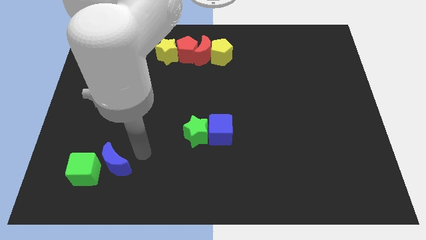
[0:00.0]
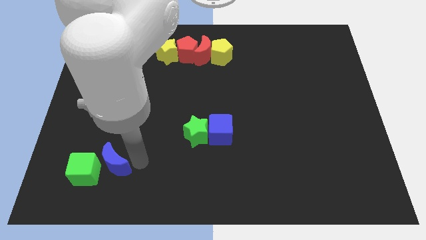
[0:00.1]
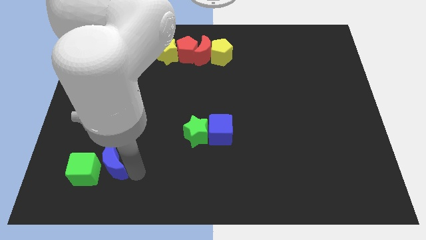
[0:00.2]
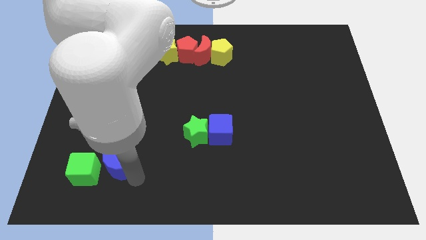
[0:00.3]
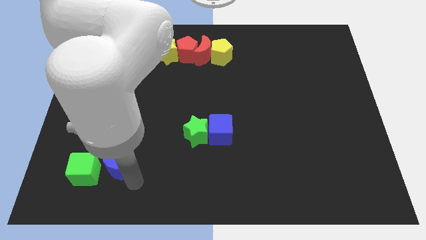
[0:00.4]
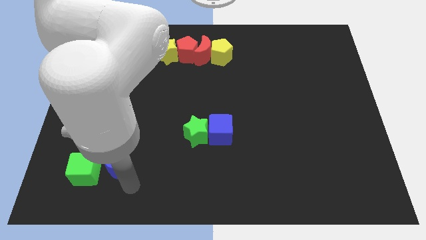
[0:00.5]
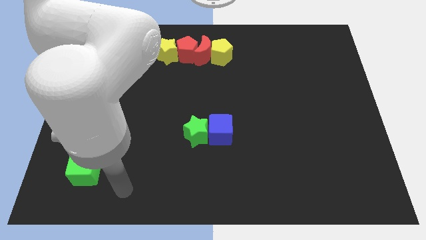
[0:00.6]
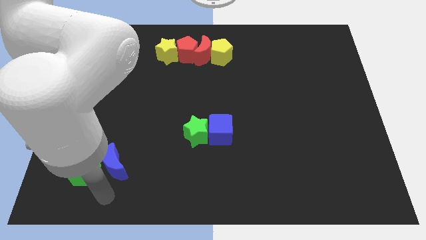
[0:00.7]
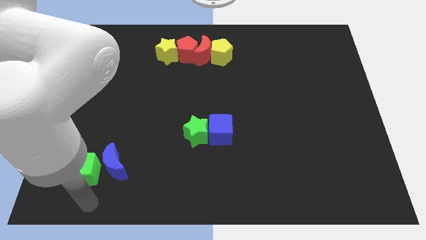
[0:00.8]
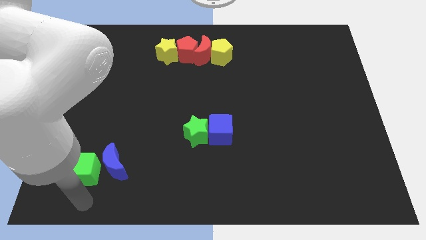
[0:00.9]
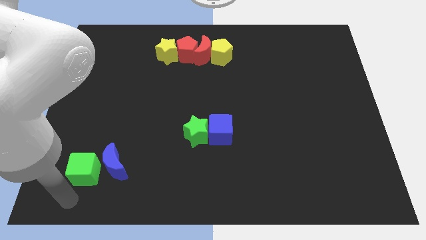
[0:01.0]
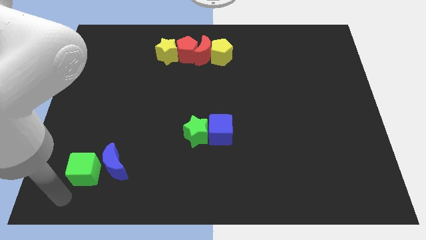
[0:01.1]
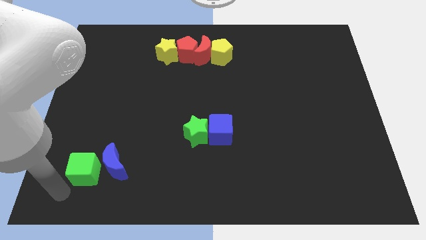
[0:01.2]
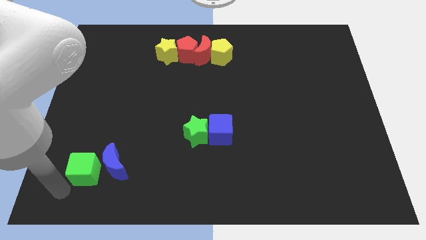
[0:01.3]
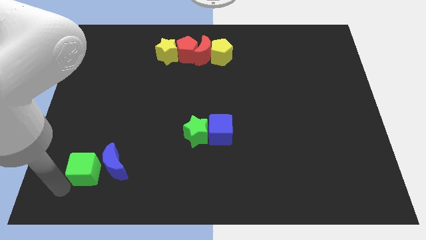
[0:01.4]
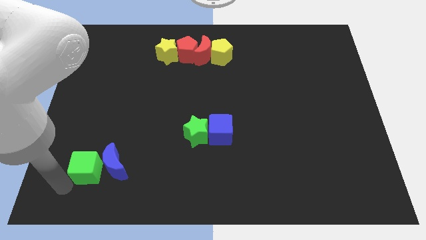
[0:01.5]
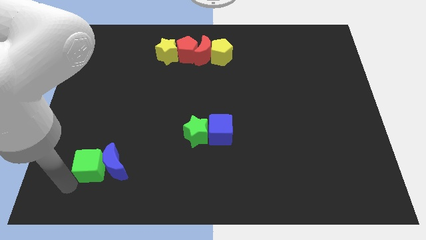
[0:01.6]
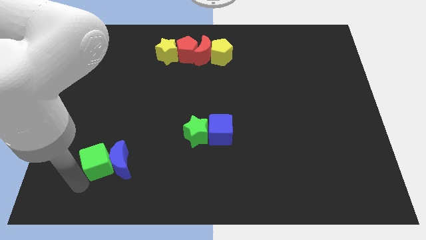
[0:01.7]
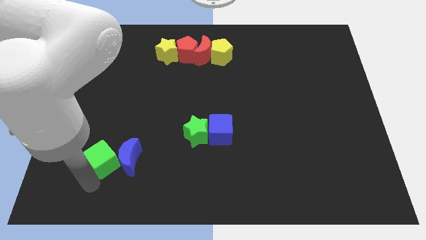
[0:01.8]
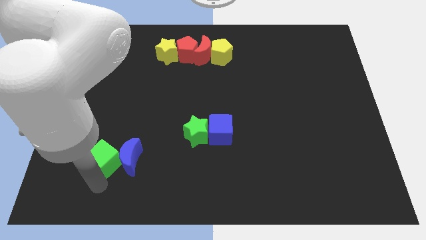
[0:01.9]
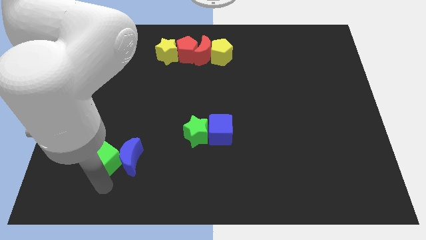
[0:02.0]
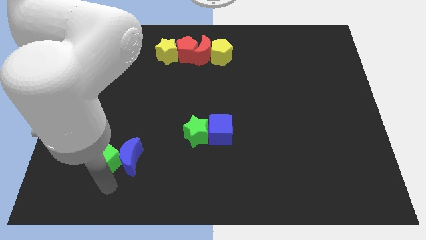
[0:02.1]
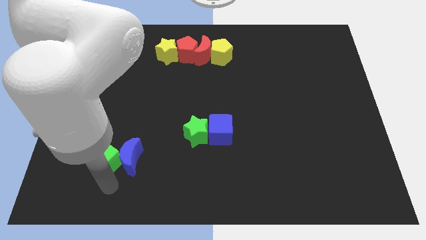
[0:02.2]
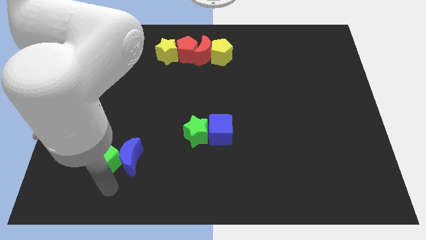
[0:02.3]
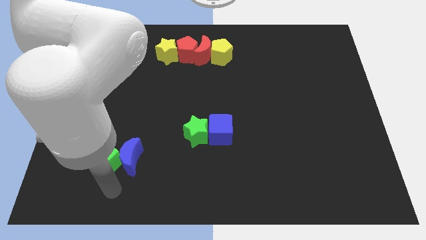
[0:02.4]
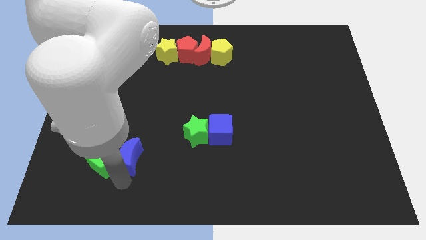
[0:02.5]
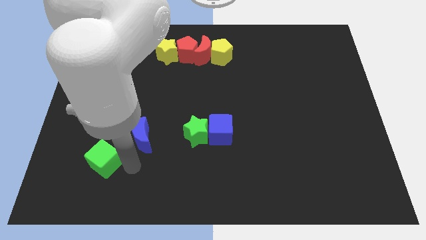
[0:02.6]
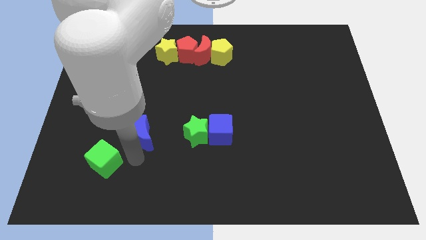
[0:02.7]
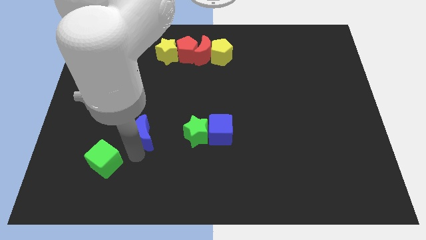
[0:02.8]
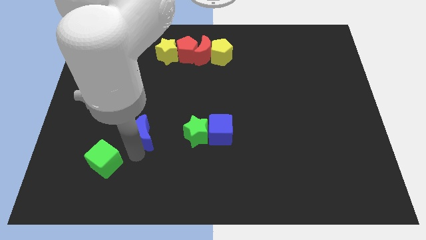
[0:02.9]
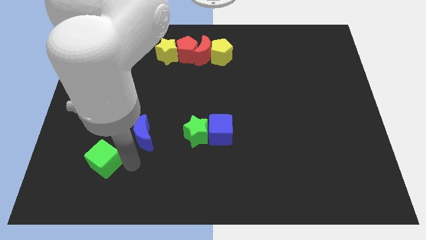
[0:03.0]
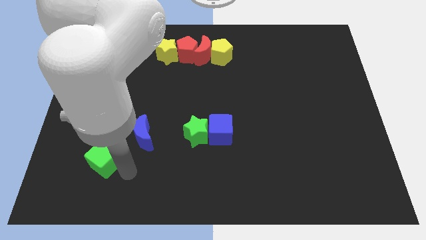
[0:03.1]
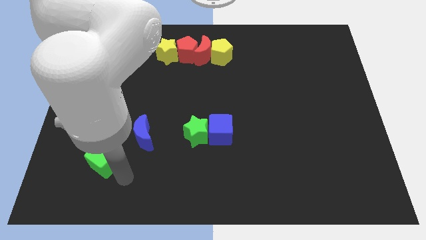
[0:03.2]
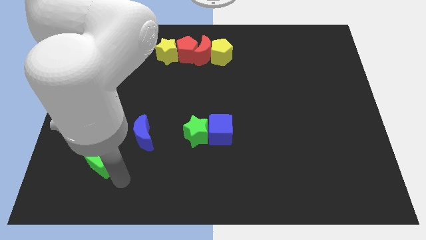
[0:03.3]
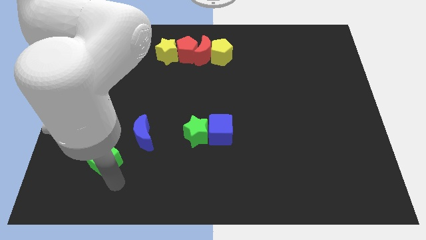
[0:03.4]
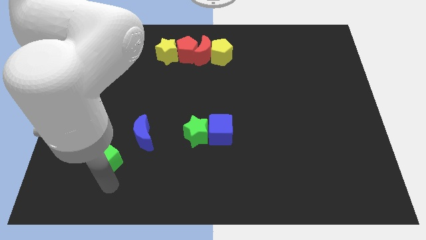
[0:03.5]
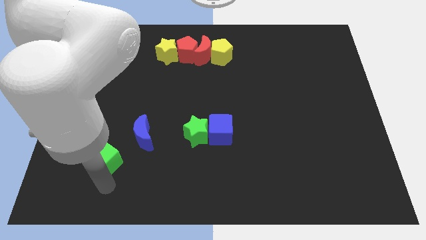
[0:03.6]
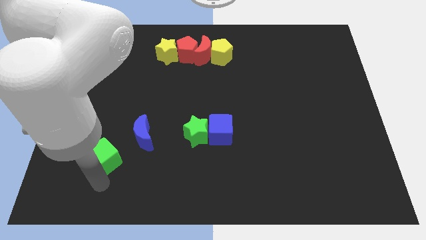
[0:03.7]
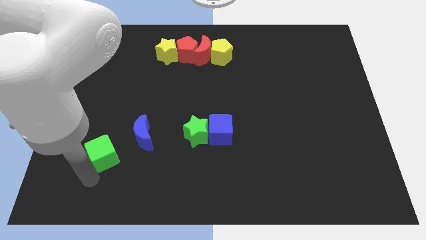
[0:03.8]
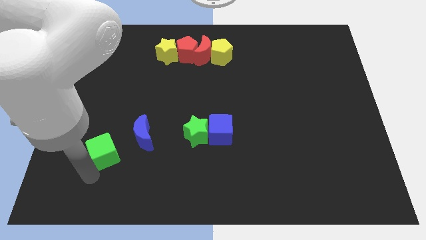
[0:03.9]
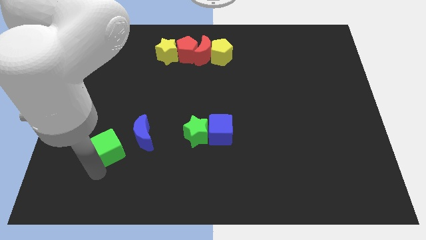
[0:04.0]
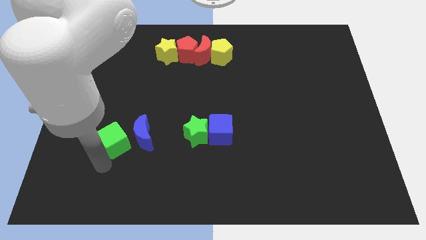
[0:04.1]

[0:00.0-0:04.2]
separate blue moon and green cube from each other

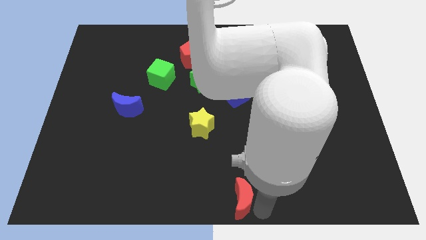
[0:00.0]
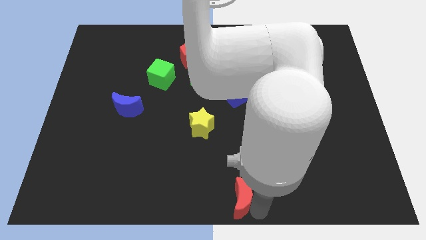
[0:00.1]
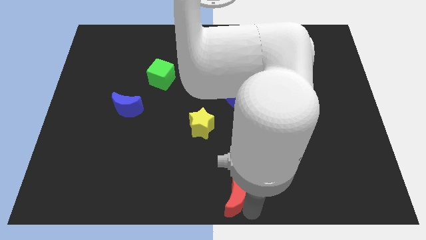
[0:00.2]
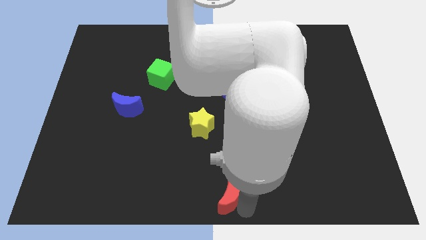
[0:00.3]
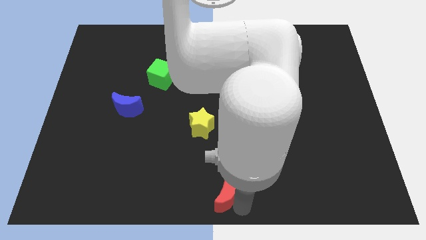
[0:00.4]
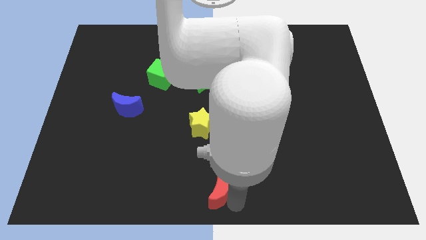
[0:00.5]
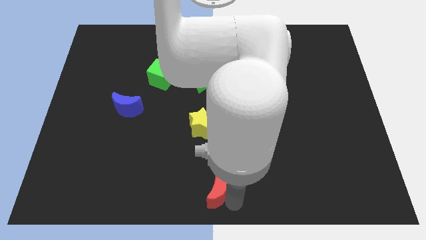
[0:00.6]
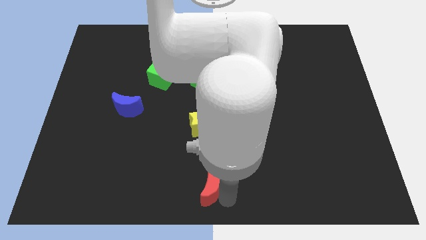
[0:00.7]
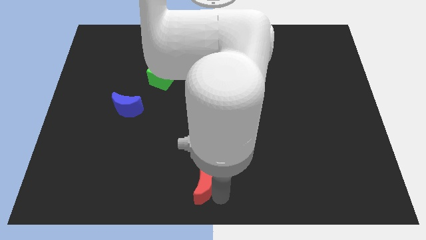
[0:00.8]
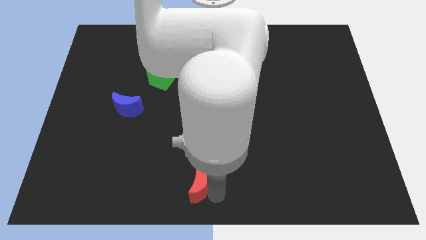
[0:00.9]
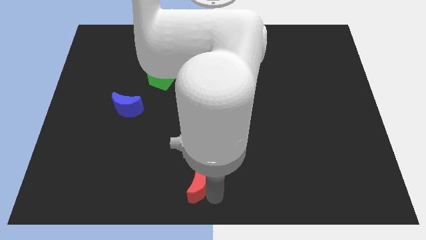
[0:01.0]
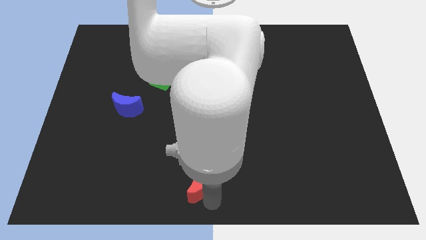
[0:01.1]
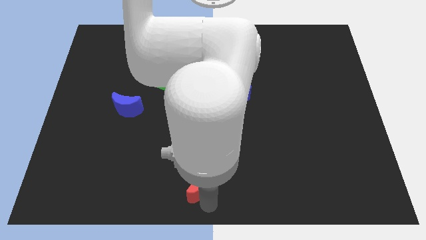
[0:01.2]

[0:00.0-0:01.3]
push the red moon below the yellow star

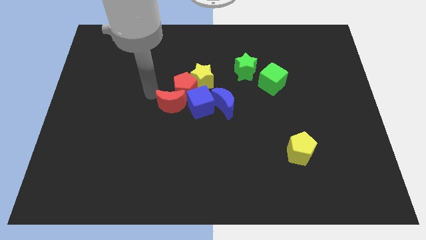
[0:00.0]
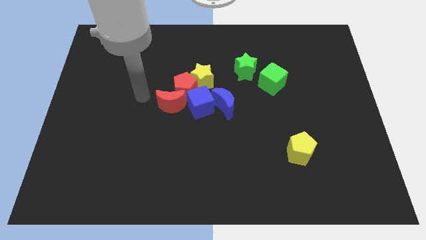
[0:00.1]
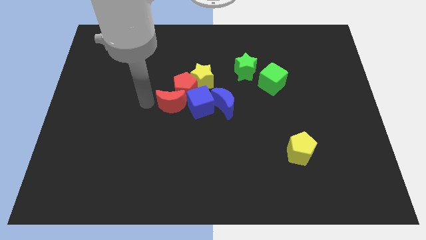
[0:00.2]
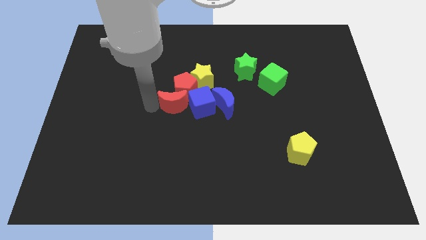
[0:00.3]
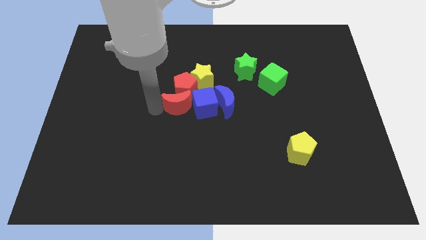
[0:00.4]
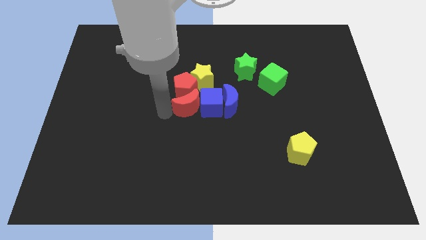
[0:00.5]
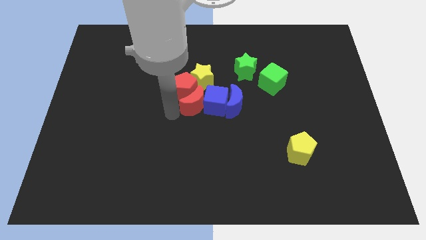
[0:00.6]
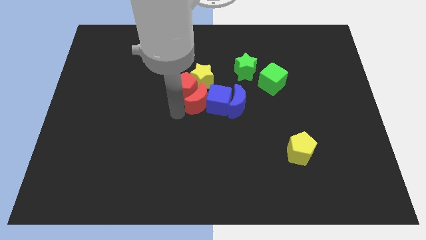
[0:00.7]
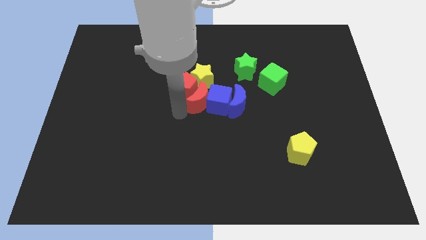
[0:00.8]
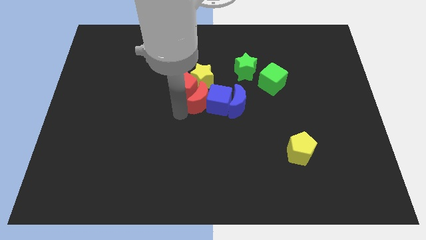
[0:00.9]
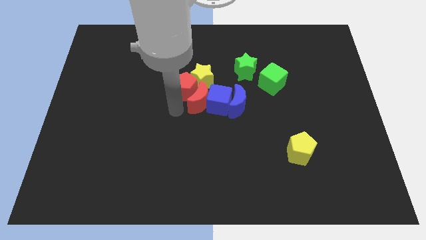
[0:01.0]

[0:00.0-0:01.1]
push the red crescent to the bottom of the yellow star

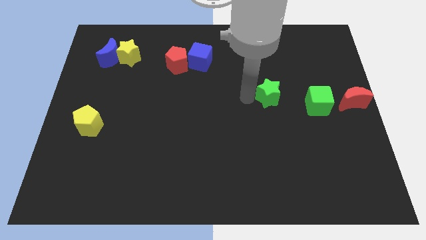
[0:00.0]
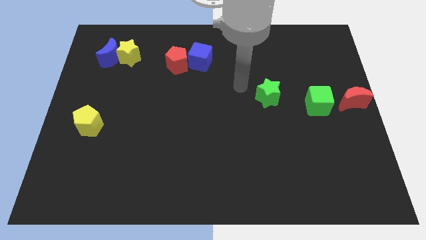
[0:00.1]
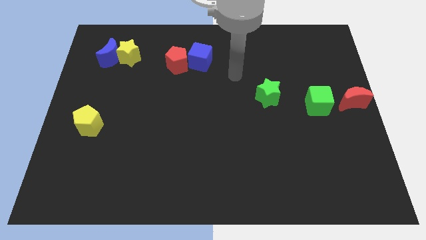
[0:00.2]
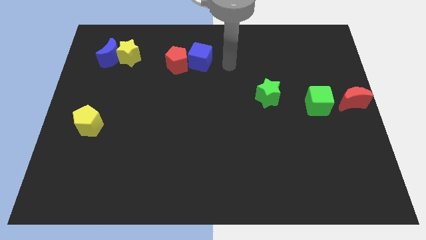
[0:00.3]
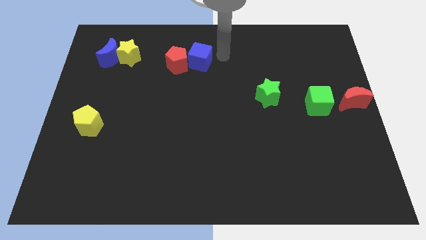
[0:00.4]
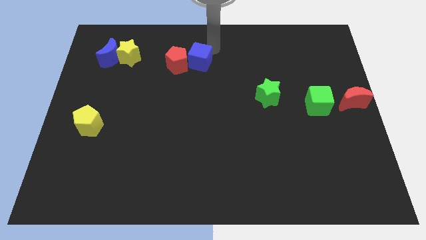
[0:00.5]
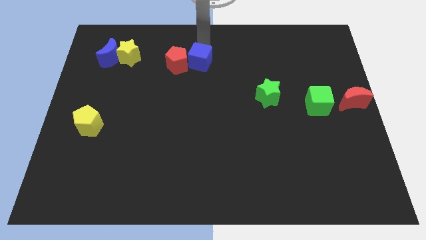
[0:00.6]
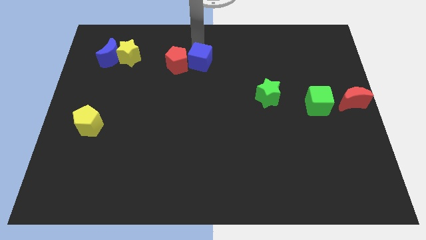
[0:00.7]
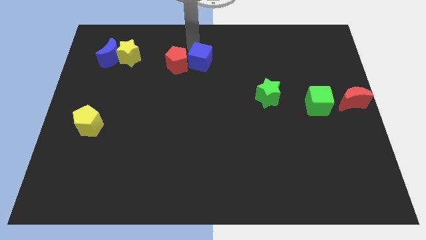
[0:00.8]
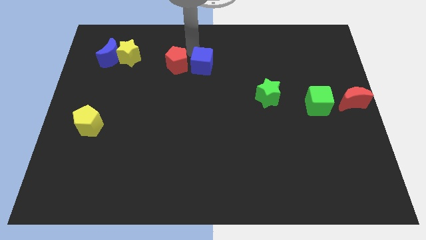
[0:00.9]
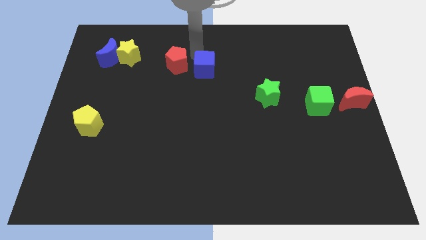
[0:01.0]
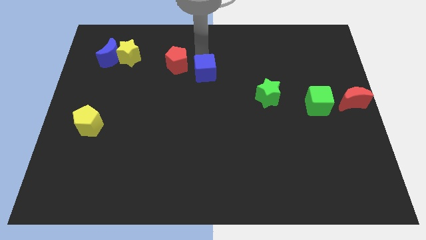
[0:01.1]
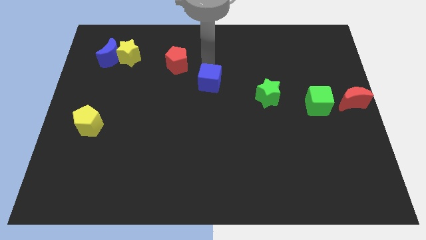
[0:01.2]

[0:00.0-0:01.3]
push the blue cube down slightly

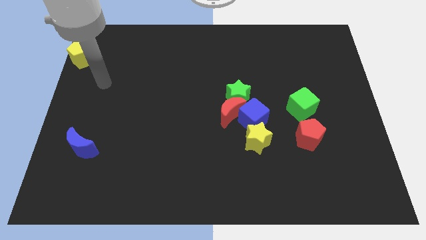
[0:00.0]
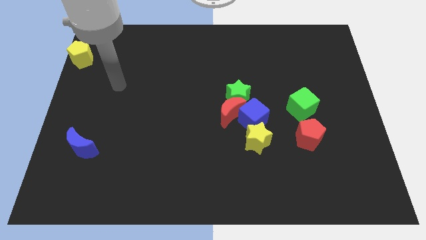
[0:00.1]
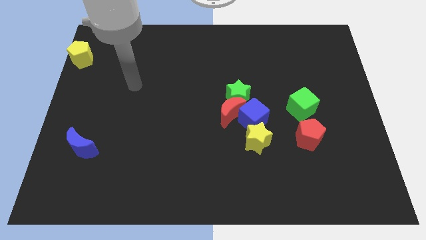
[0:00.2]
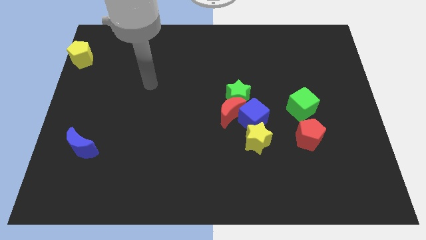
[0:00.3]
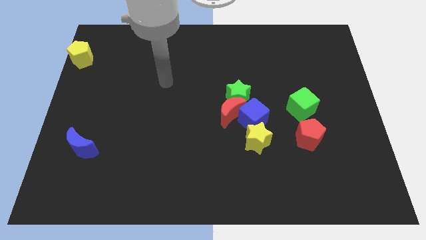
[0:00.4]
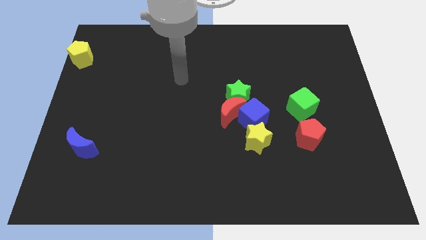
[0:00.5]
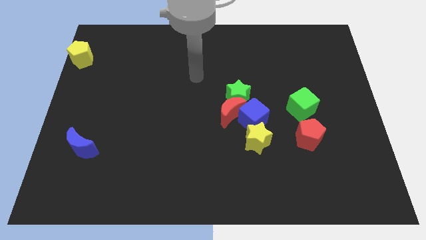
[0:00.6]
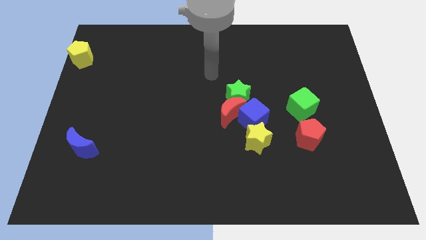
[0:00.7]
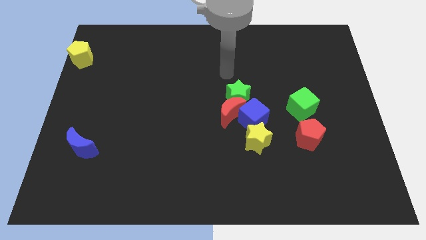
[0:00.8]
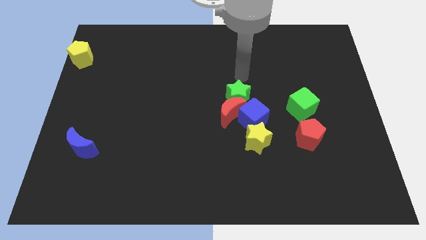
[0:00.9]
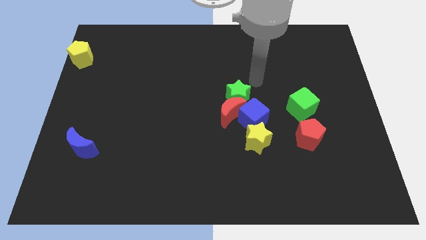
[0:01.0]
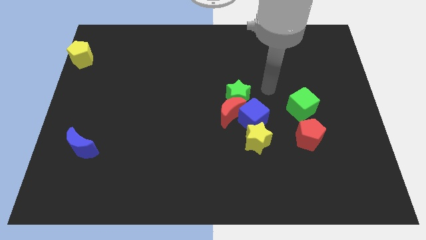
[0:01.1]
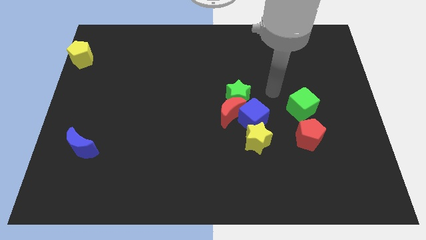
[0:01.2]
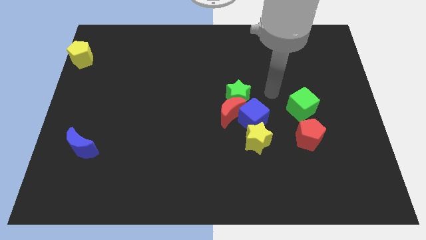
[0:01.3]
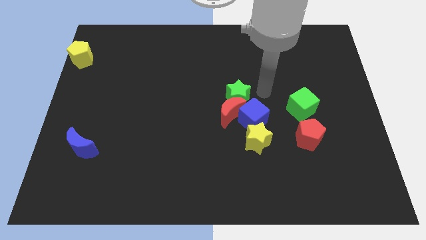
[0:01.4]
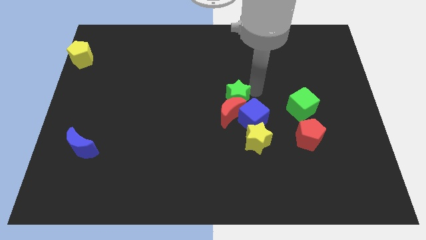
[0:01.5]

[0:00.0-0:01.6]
move your arm towards the green star
